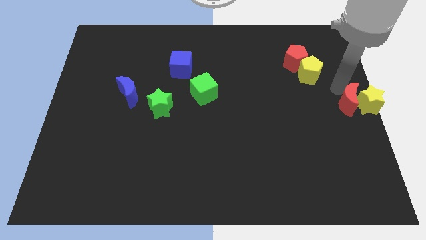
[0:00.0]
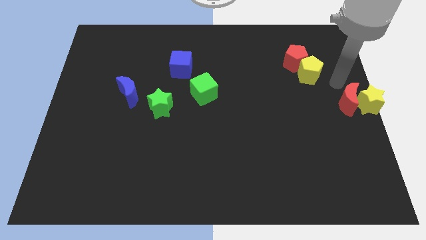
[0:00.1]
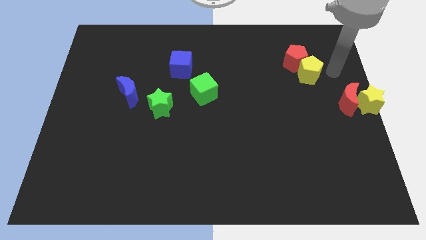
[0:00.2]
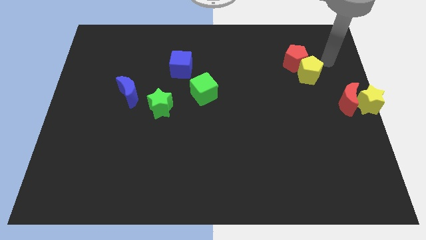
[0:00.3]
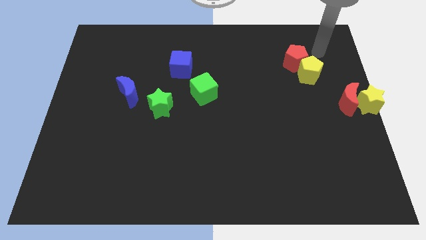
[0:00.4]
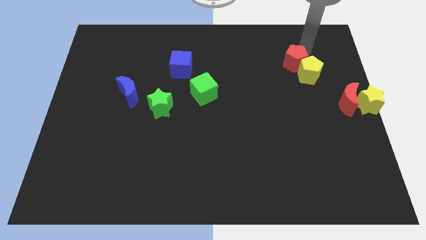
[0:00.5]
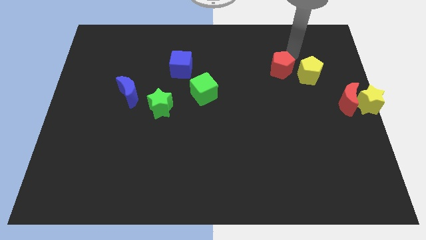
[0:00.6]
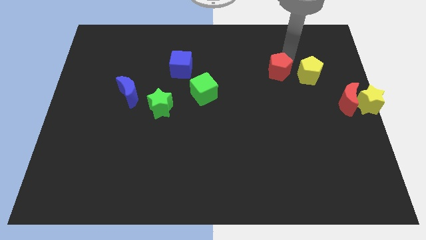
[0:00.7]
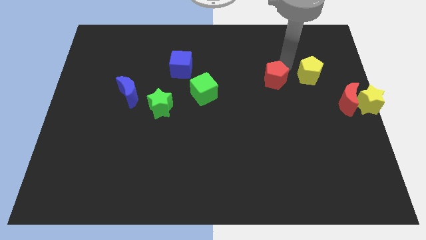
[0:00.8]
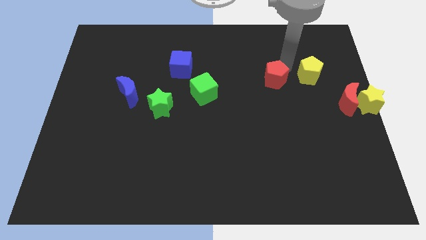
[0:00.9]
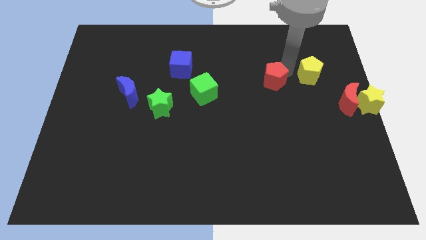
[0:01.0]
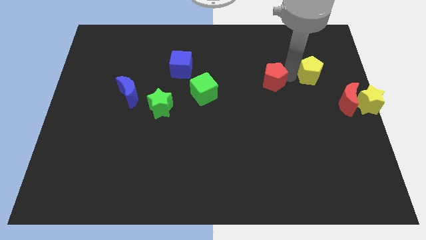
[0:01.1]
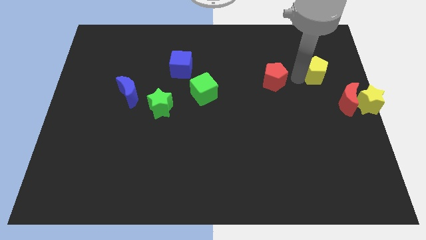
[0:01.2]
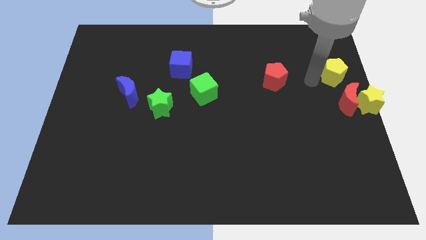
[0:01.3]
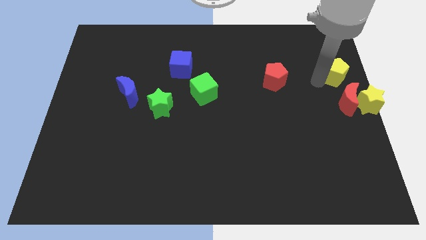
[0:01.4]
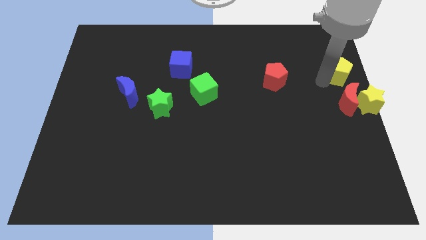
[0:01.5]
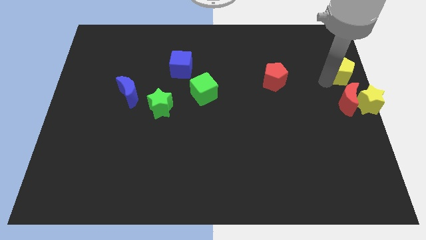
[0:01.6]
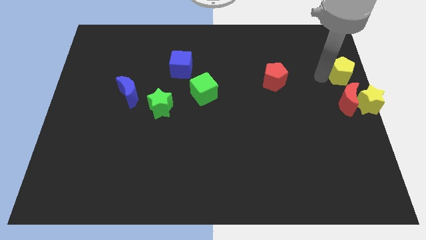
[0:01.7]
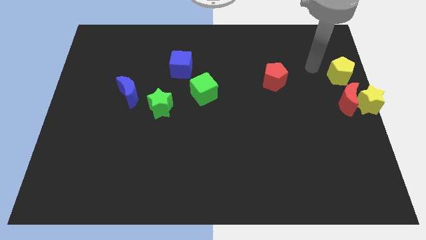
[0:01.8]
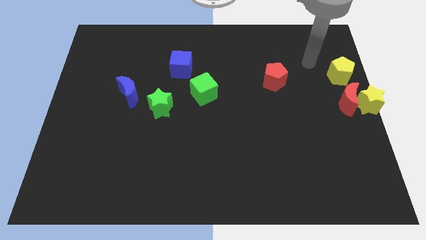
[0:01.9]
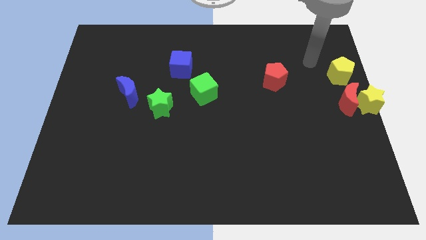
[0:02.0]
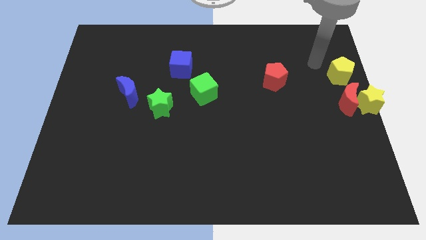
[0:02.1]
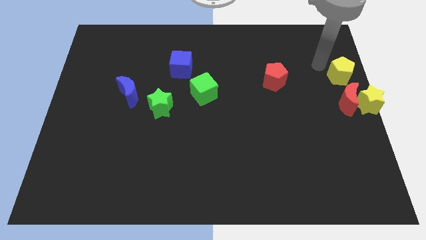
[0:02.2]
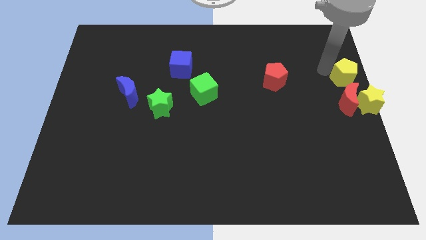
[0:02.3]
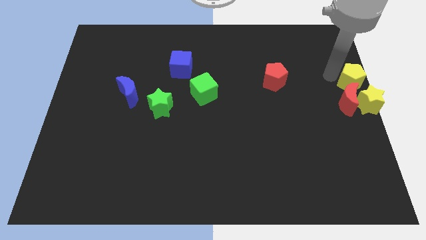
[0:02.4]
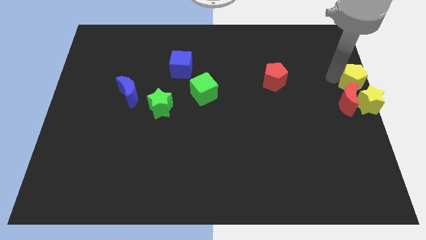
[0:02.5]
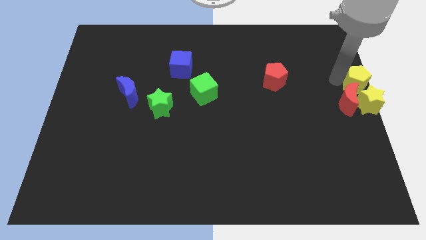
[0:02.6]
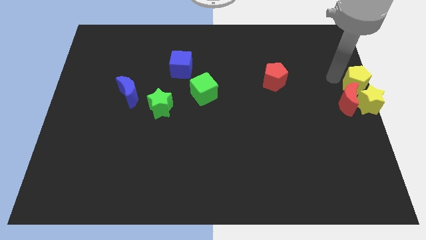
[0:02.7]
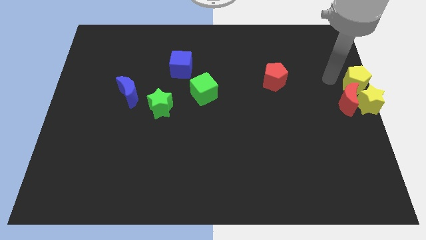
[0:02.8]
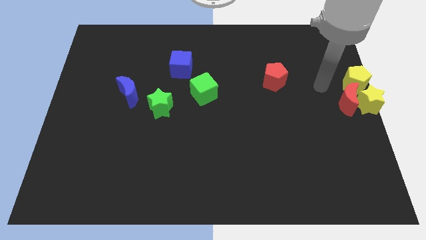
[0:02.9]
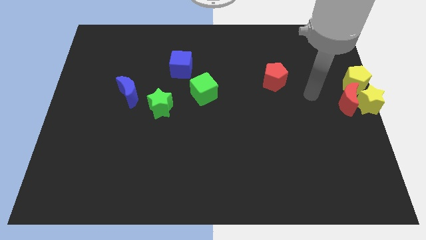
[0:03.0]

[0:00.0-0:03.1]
separate the pentagons in different directions

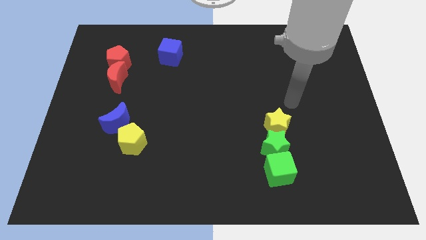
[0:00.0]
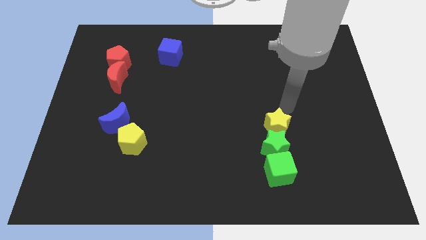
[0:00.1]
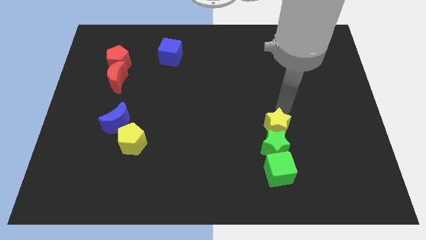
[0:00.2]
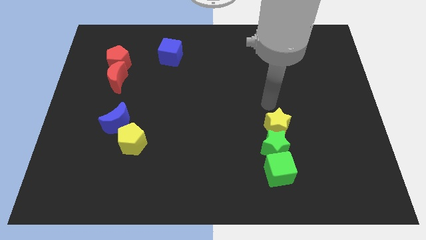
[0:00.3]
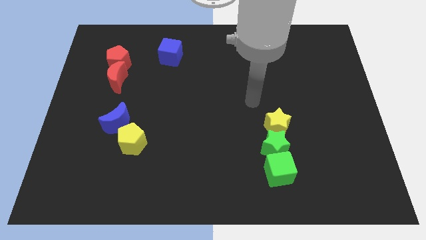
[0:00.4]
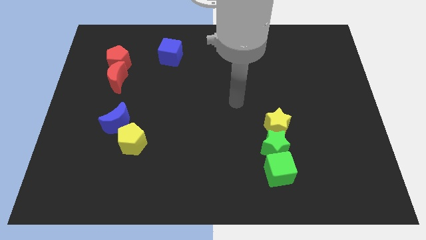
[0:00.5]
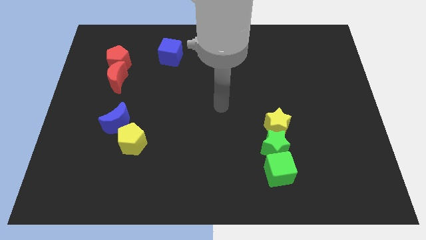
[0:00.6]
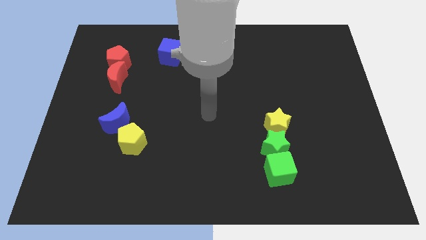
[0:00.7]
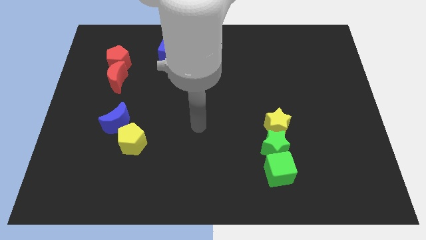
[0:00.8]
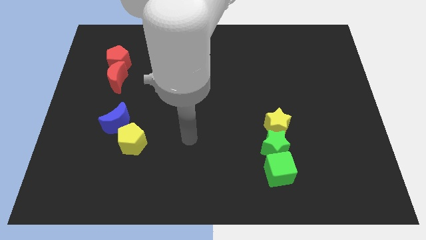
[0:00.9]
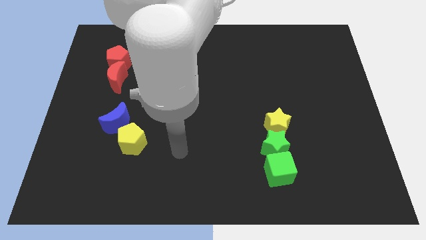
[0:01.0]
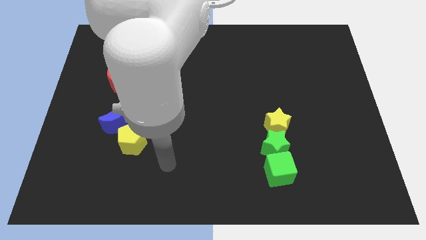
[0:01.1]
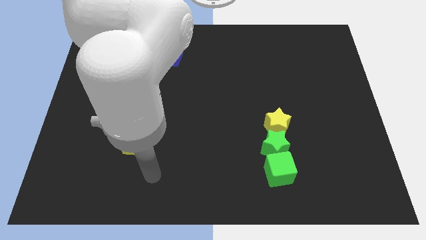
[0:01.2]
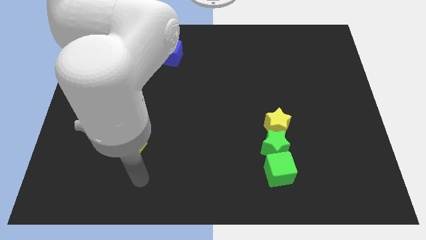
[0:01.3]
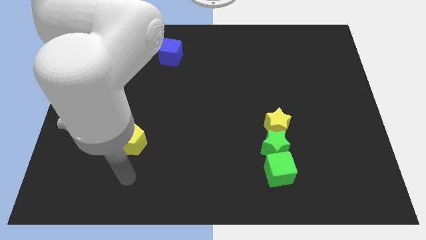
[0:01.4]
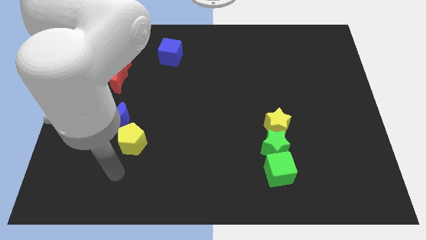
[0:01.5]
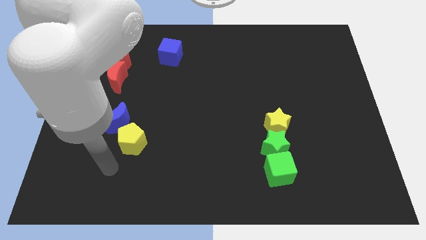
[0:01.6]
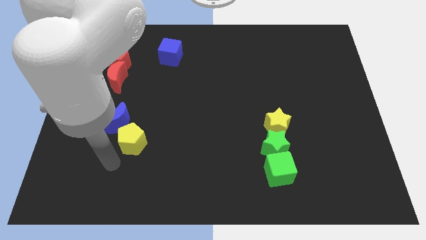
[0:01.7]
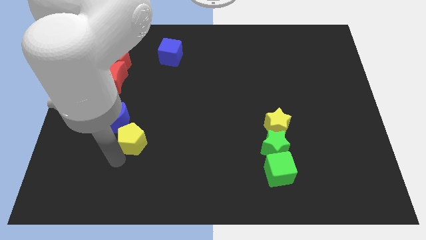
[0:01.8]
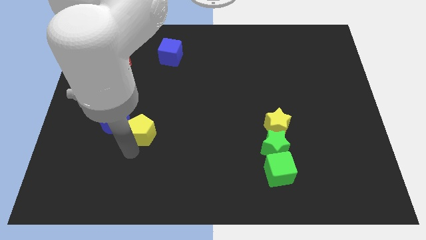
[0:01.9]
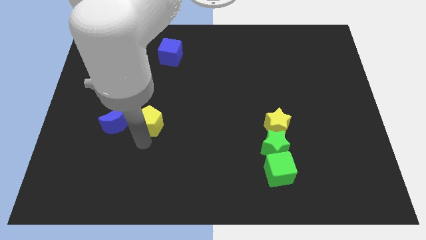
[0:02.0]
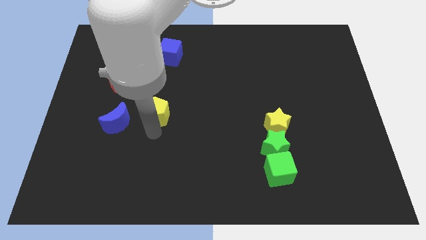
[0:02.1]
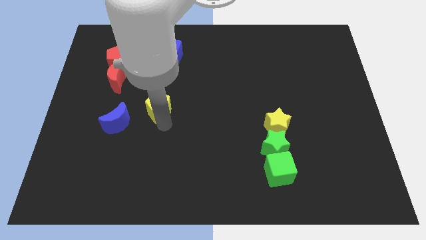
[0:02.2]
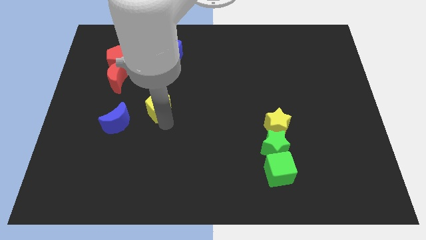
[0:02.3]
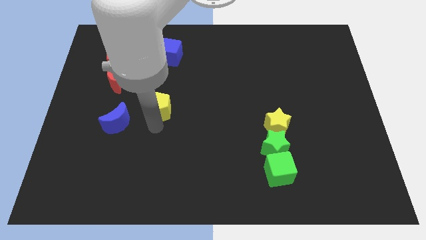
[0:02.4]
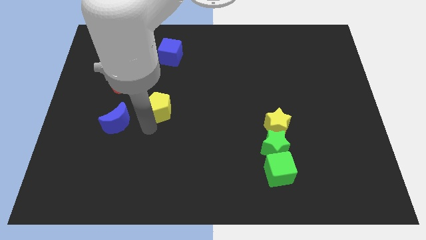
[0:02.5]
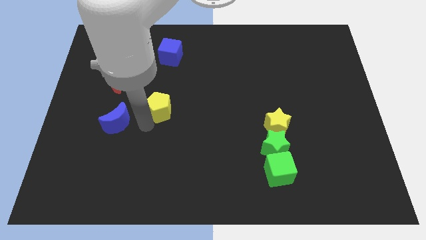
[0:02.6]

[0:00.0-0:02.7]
move the arm away from the yellow star

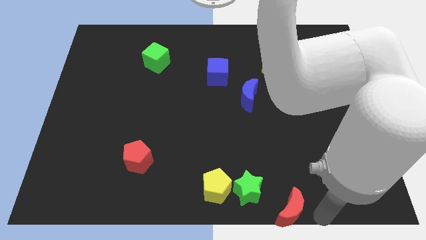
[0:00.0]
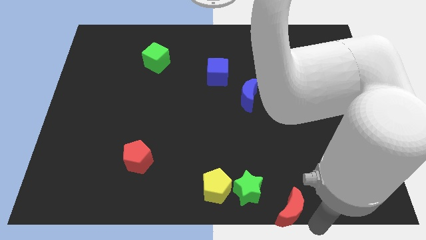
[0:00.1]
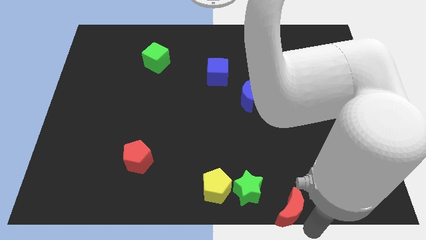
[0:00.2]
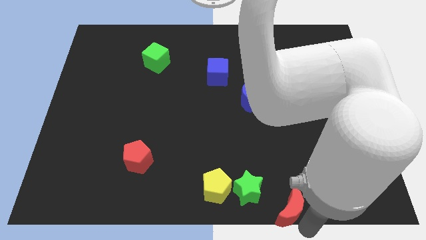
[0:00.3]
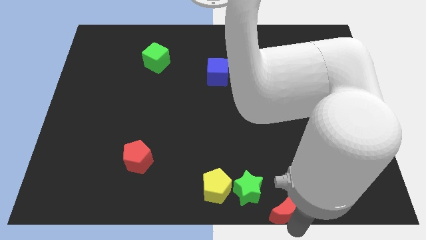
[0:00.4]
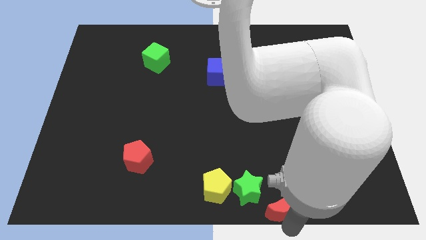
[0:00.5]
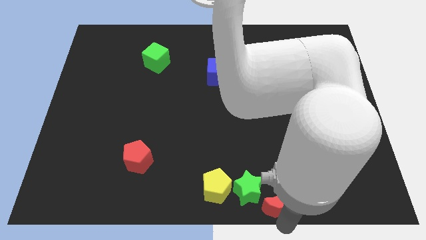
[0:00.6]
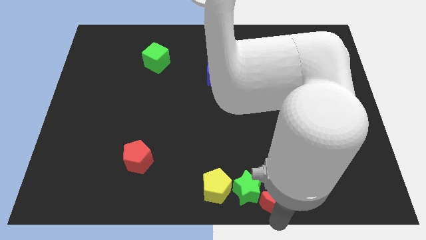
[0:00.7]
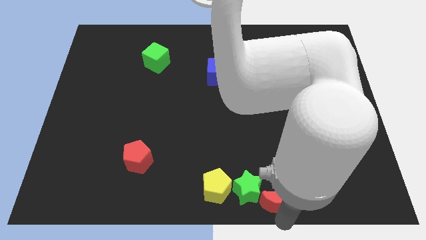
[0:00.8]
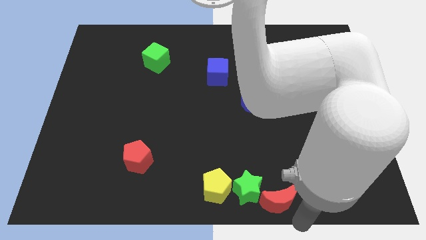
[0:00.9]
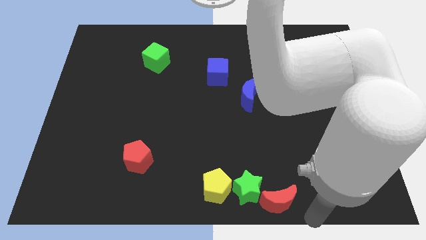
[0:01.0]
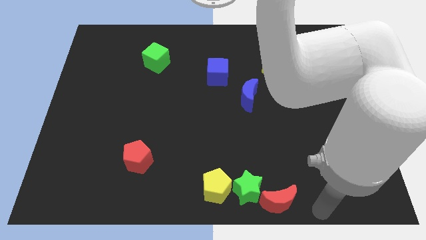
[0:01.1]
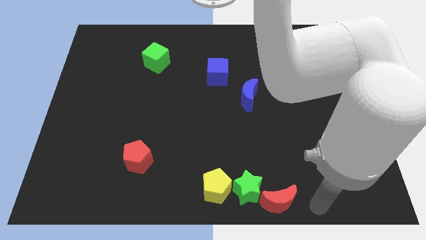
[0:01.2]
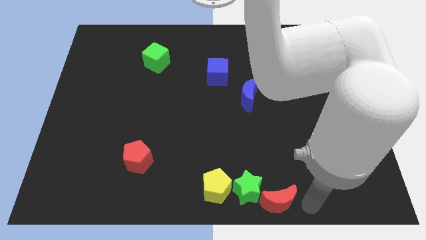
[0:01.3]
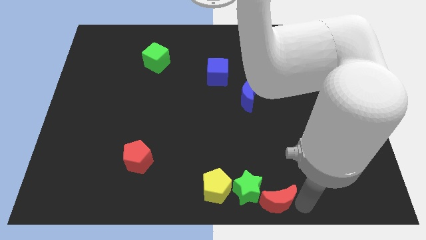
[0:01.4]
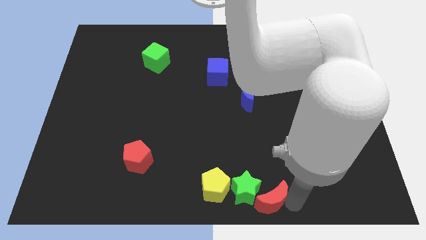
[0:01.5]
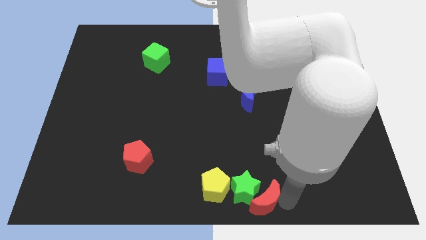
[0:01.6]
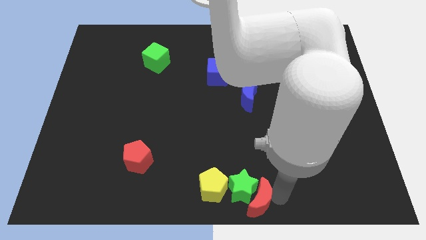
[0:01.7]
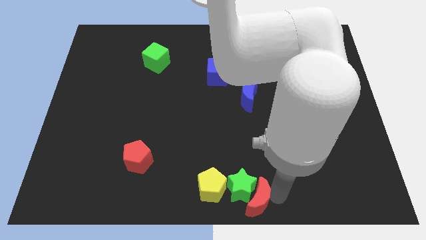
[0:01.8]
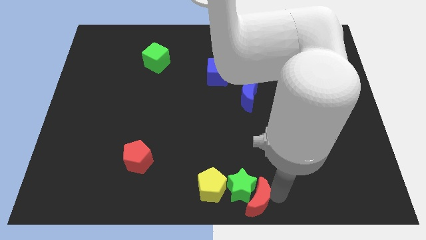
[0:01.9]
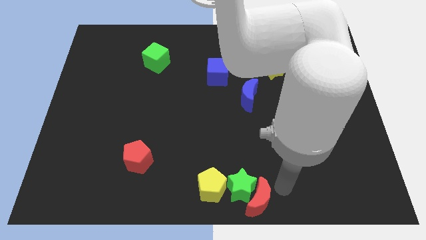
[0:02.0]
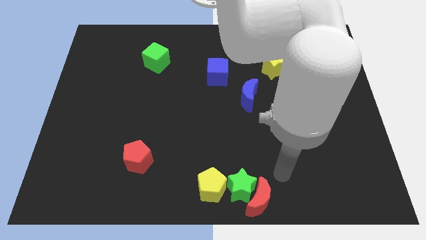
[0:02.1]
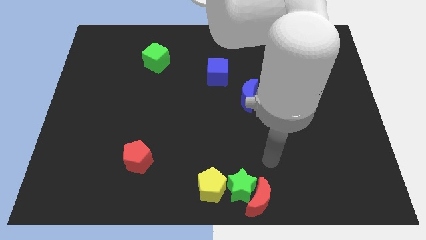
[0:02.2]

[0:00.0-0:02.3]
move the red moon into green star

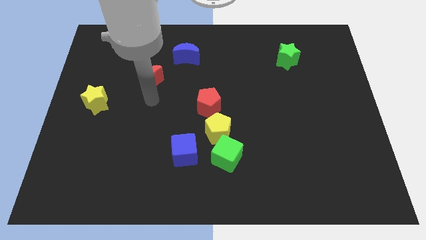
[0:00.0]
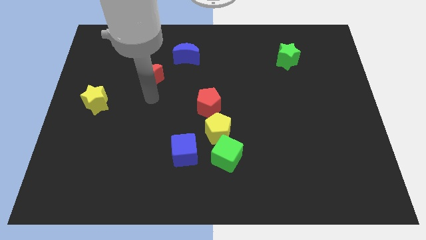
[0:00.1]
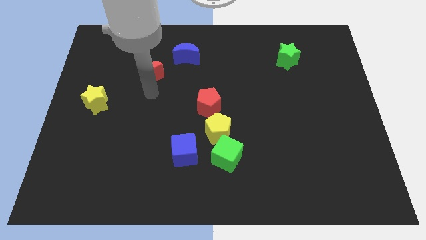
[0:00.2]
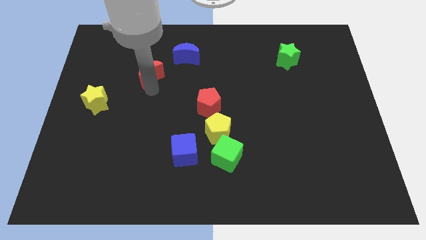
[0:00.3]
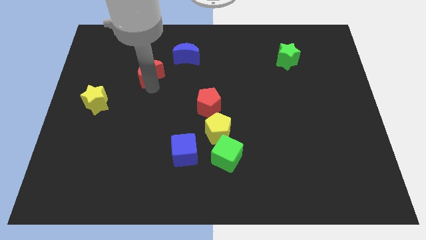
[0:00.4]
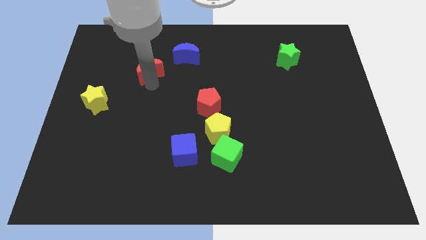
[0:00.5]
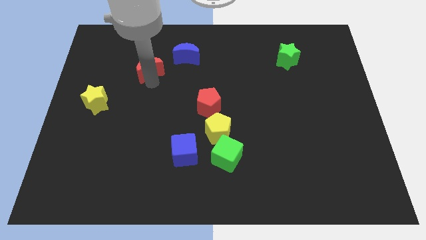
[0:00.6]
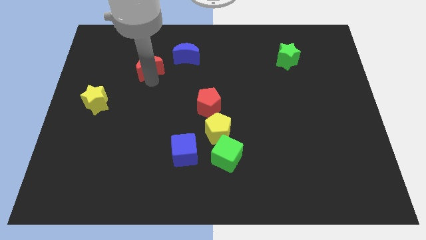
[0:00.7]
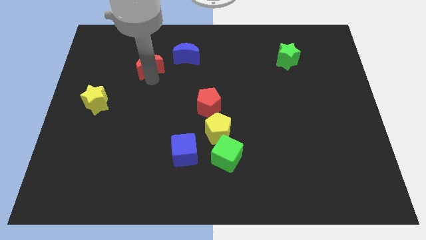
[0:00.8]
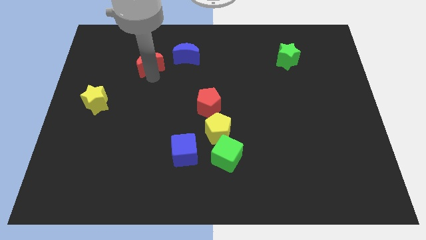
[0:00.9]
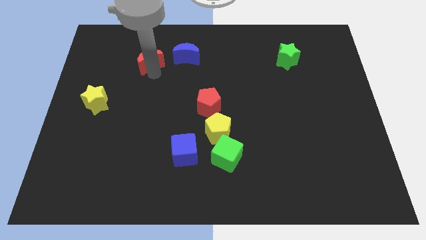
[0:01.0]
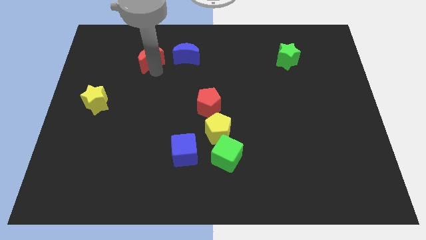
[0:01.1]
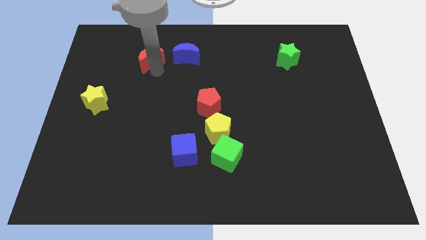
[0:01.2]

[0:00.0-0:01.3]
place the red crescent below the blue crescent
